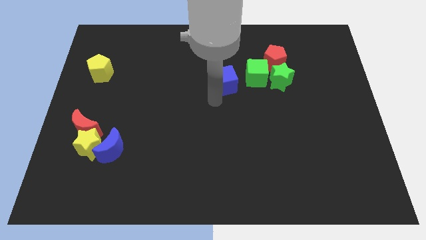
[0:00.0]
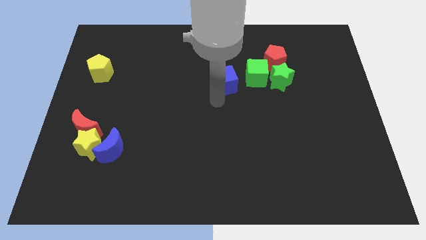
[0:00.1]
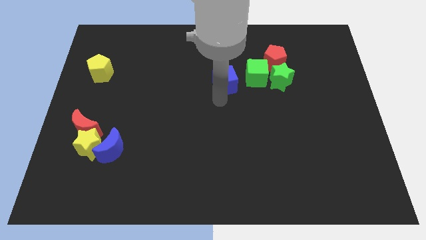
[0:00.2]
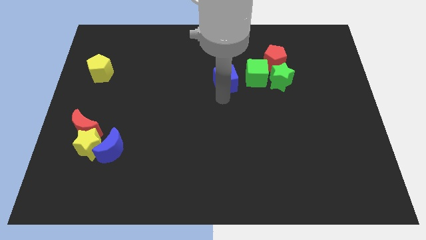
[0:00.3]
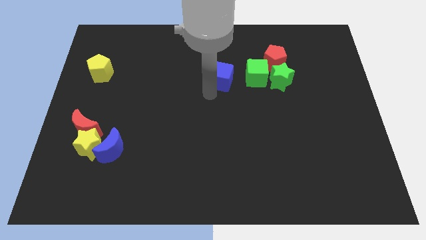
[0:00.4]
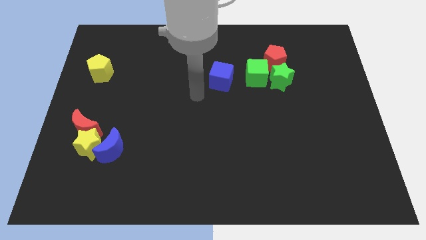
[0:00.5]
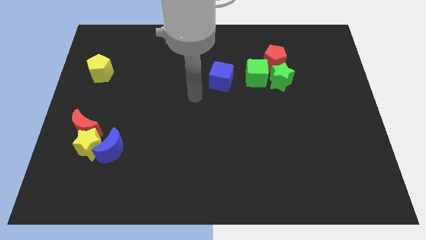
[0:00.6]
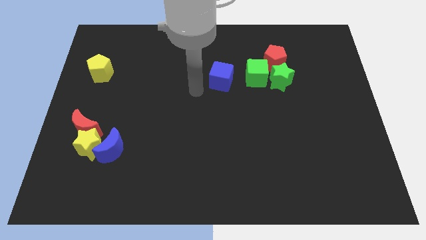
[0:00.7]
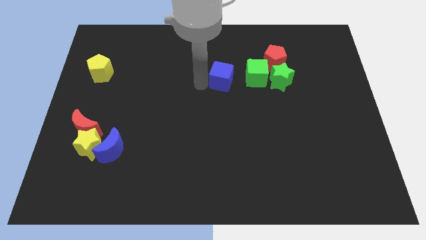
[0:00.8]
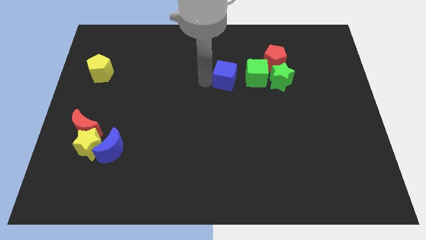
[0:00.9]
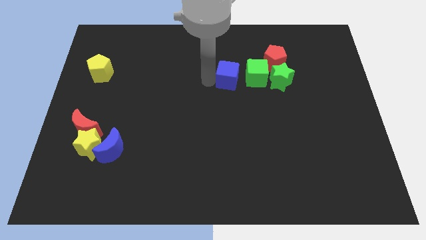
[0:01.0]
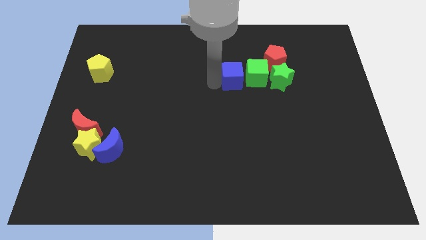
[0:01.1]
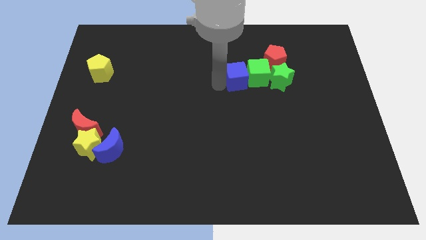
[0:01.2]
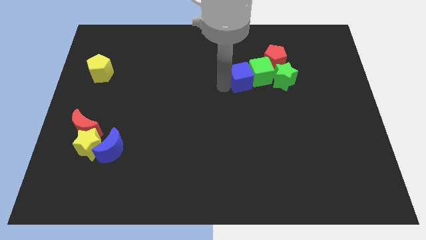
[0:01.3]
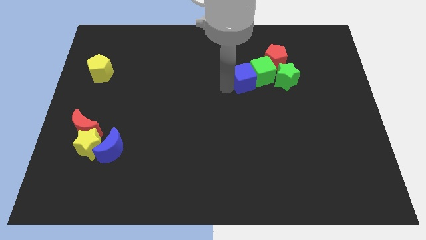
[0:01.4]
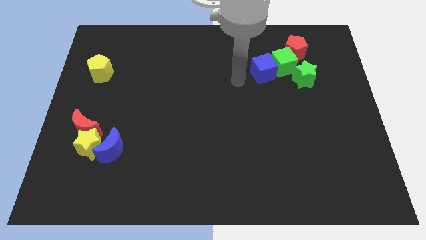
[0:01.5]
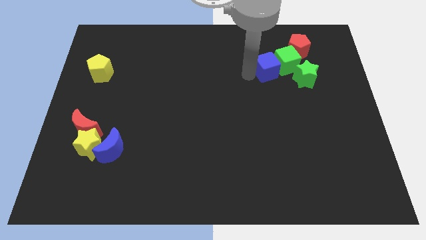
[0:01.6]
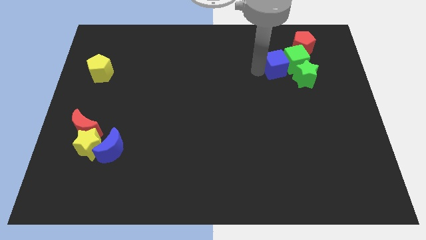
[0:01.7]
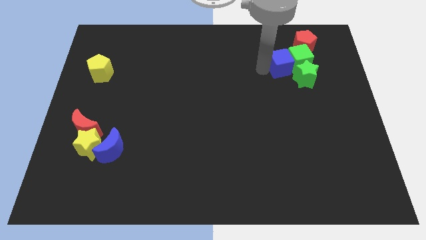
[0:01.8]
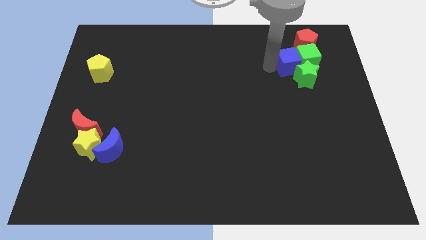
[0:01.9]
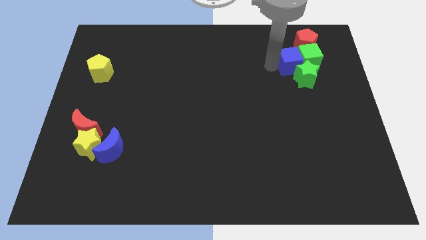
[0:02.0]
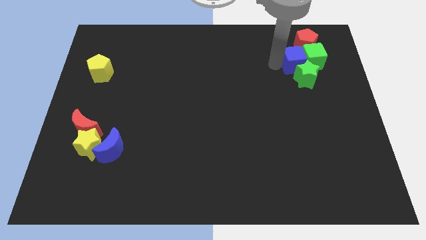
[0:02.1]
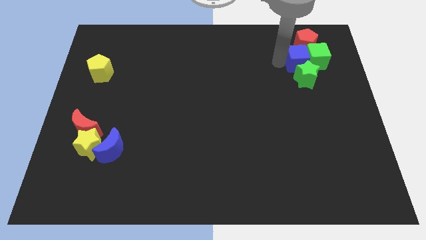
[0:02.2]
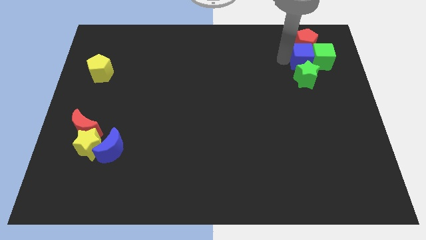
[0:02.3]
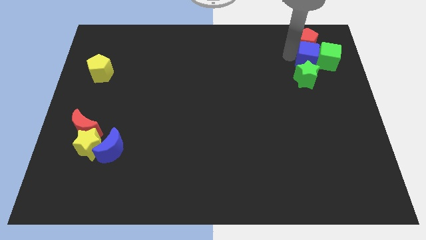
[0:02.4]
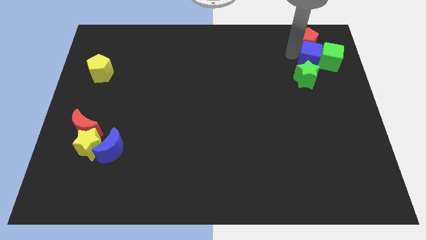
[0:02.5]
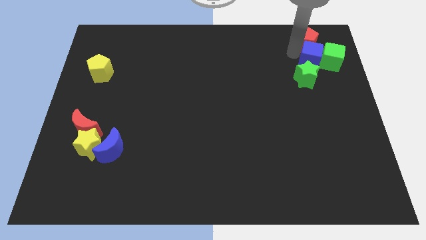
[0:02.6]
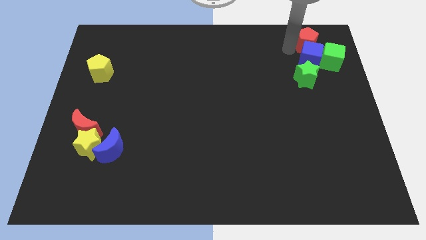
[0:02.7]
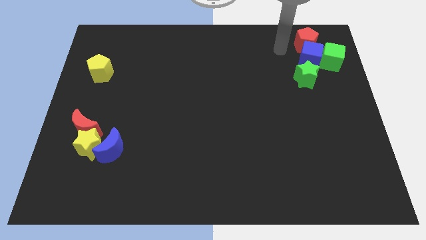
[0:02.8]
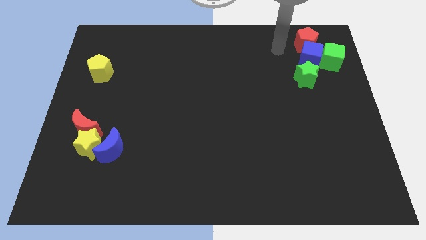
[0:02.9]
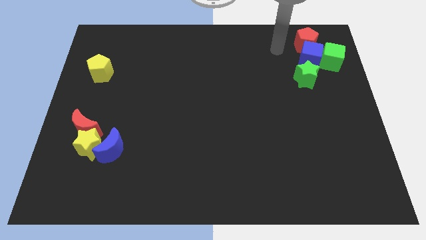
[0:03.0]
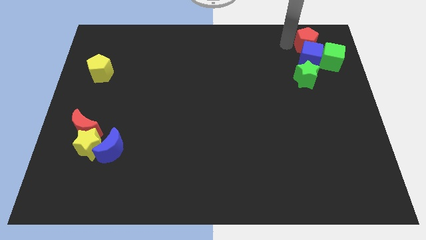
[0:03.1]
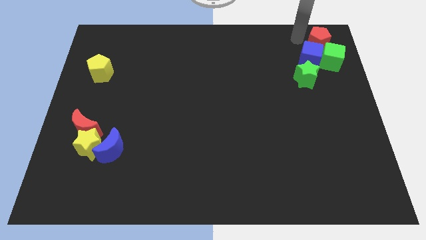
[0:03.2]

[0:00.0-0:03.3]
drag the blue cubered pentagongreen cubegreen star towards top

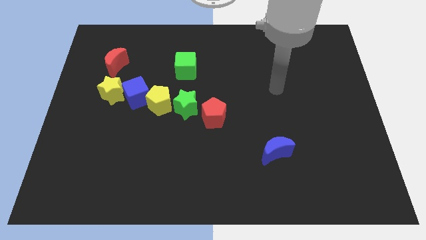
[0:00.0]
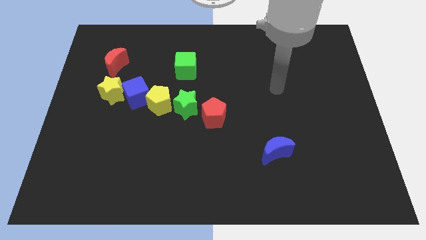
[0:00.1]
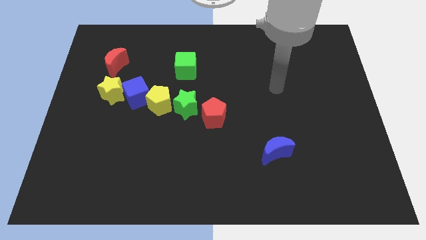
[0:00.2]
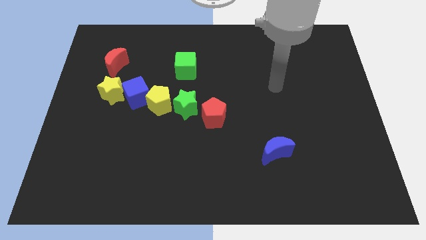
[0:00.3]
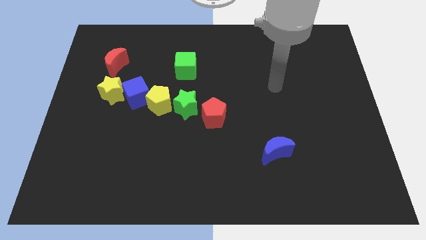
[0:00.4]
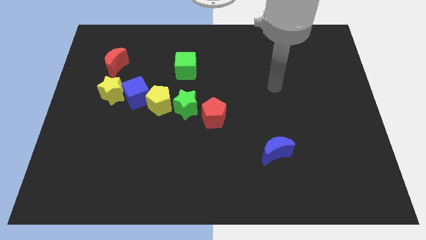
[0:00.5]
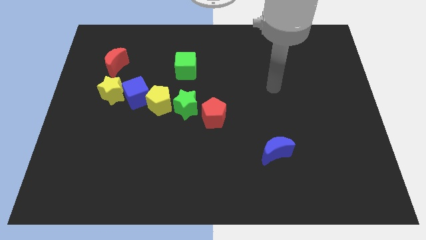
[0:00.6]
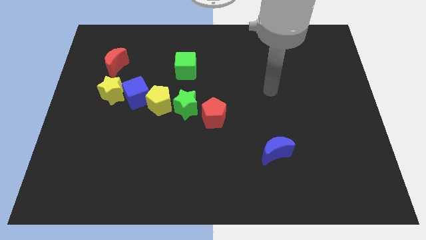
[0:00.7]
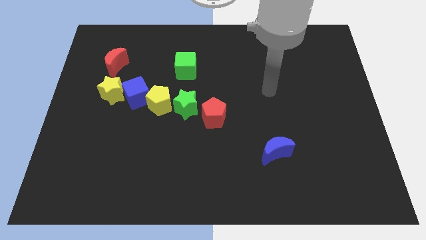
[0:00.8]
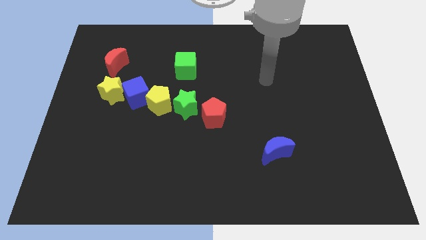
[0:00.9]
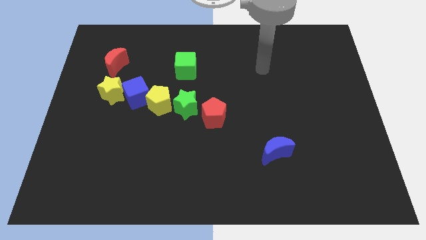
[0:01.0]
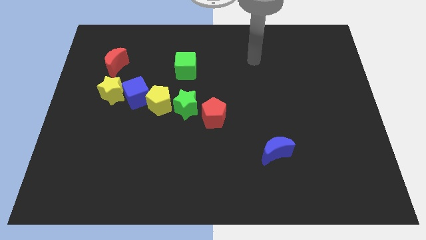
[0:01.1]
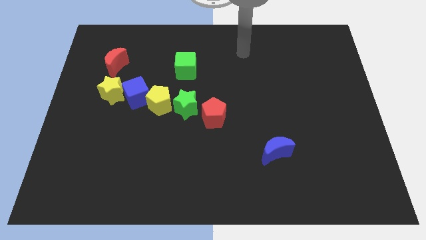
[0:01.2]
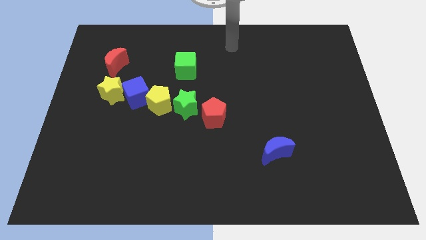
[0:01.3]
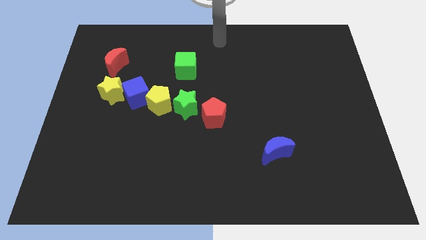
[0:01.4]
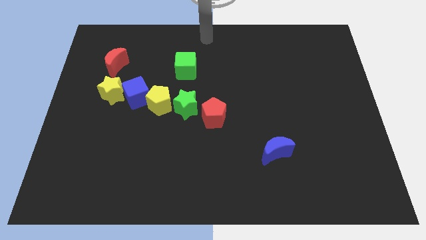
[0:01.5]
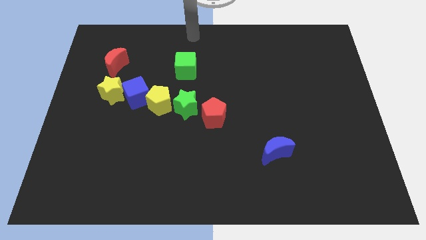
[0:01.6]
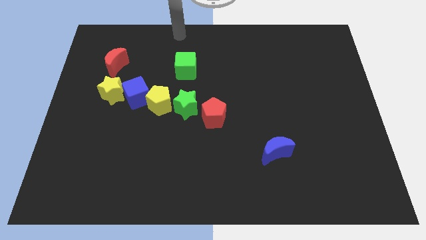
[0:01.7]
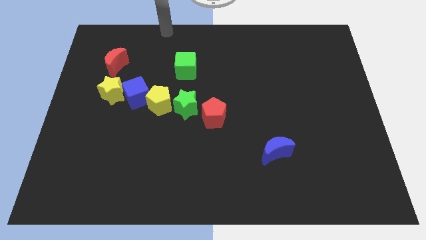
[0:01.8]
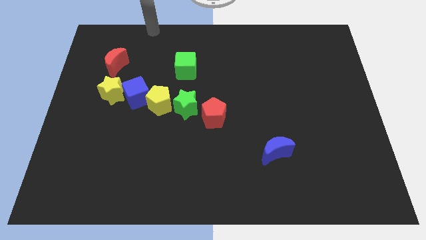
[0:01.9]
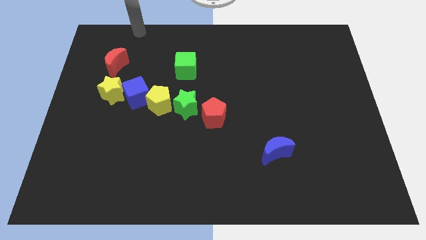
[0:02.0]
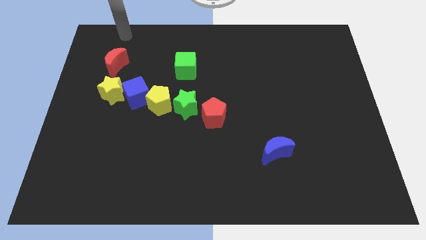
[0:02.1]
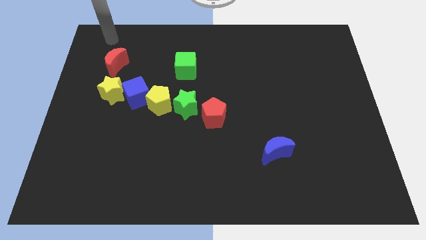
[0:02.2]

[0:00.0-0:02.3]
move your arm towards the top left of the board

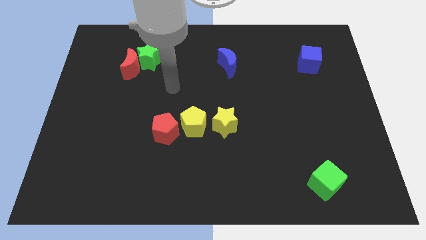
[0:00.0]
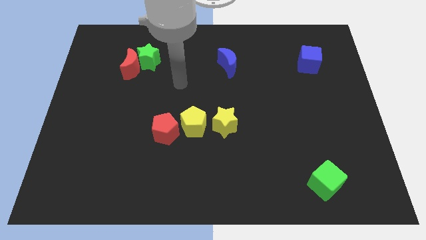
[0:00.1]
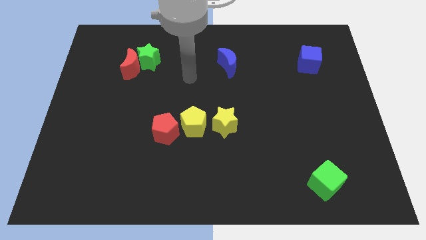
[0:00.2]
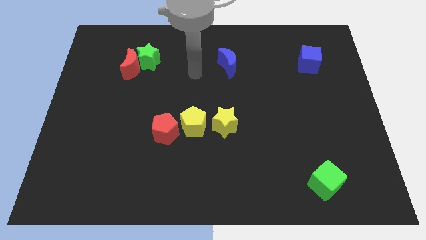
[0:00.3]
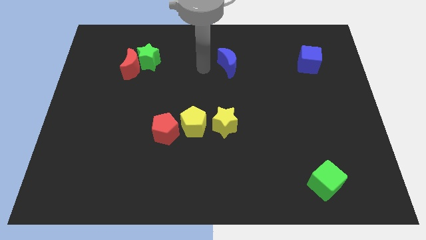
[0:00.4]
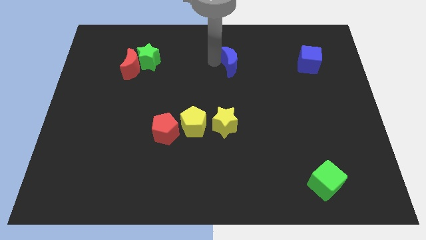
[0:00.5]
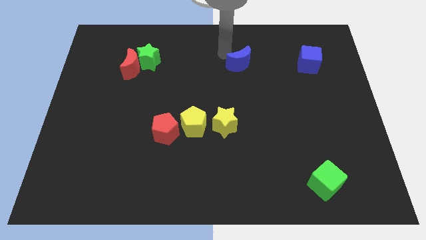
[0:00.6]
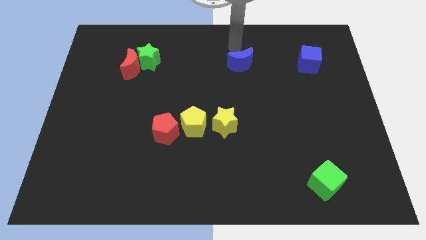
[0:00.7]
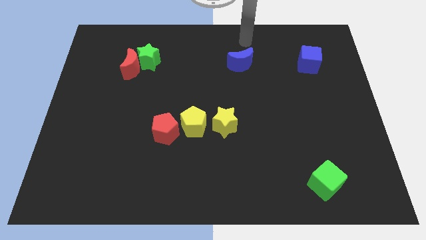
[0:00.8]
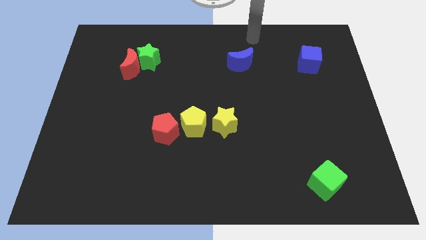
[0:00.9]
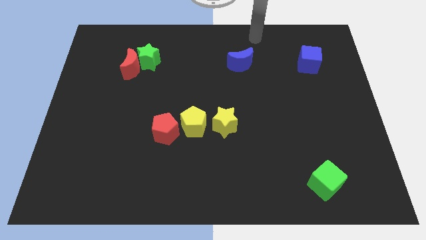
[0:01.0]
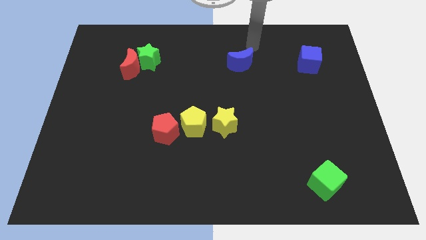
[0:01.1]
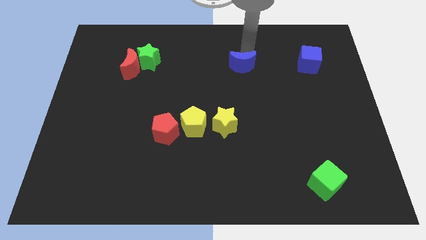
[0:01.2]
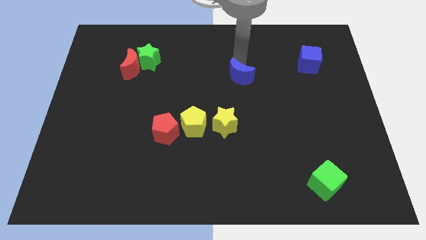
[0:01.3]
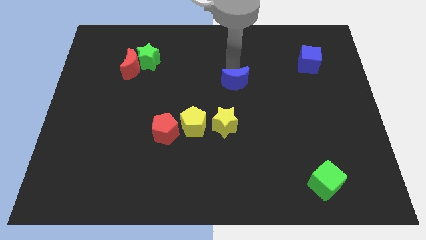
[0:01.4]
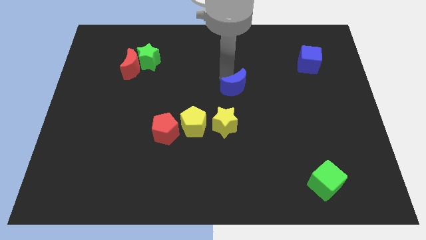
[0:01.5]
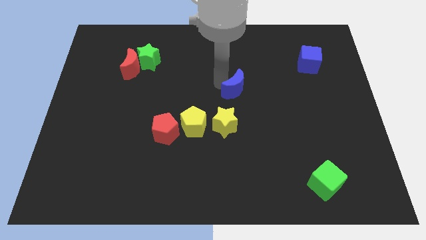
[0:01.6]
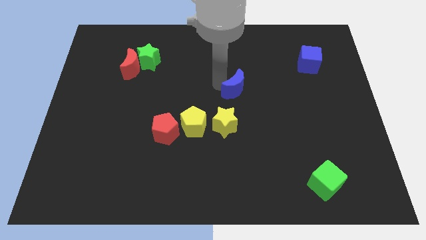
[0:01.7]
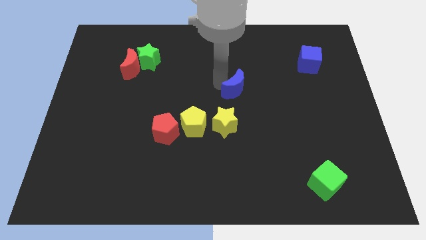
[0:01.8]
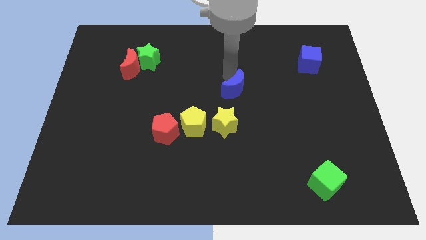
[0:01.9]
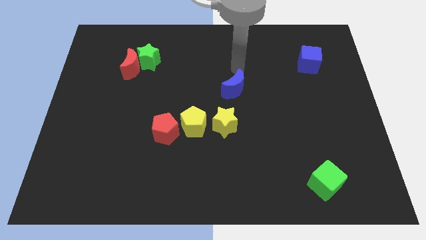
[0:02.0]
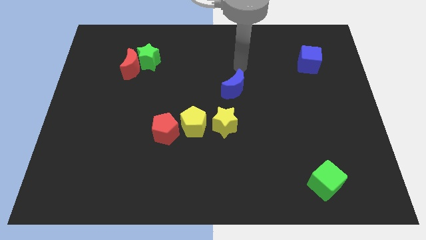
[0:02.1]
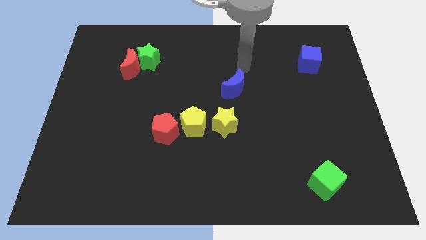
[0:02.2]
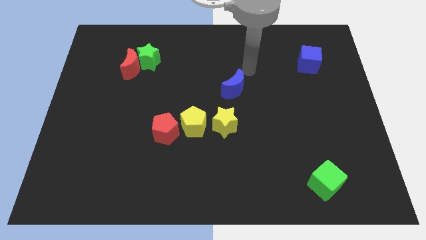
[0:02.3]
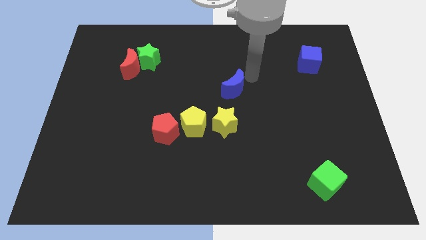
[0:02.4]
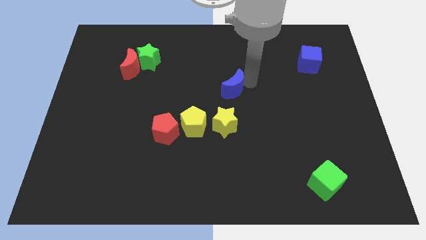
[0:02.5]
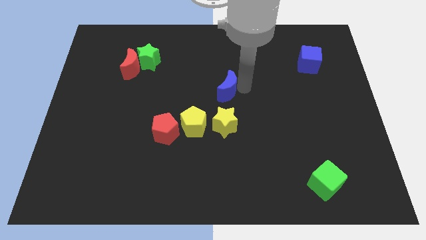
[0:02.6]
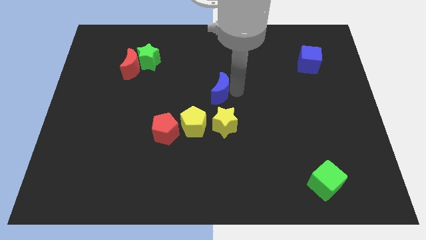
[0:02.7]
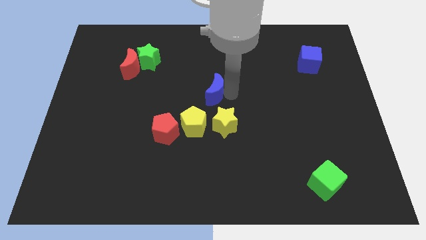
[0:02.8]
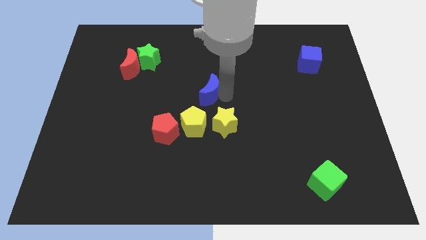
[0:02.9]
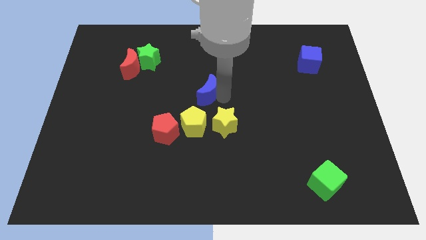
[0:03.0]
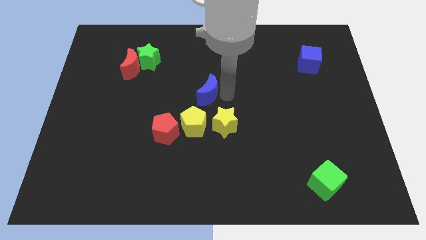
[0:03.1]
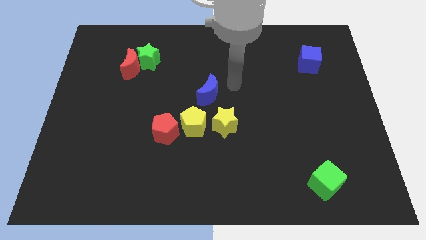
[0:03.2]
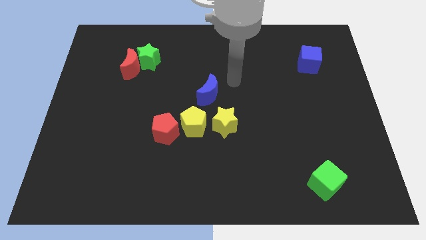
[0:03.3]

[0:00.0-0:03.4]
push the blue crescent to the top of the yellow pentagon
